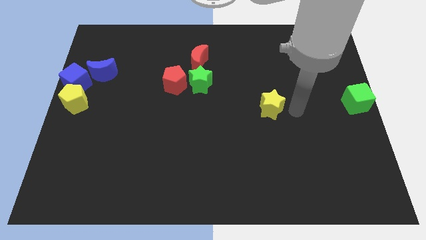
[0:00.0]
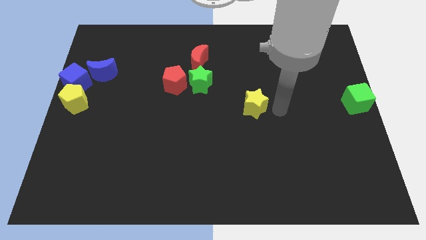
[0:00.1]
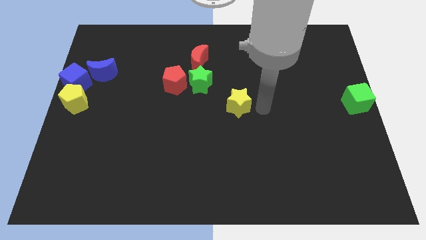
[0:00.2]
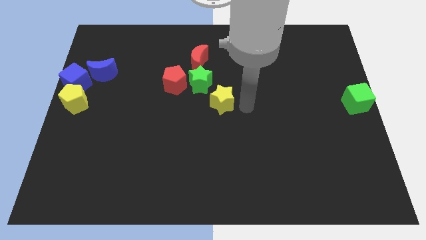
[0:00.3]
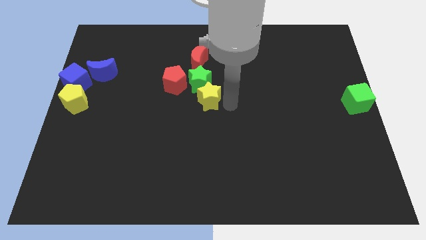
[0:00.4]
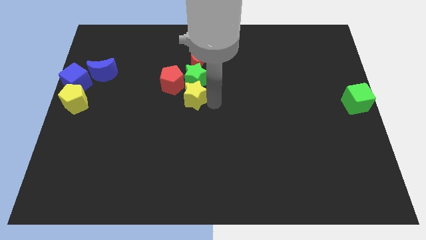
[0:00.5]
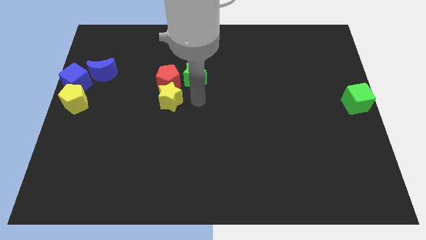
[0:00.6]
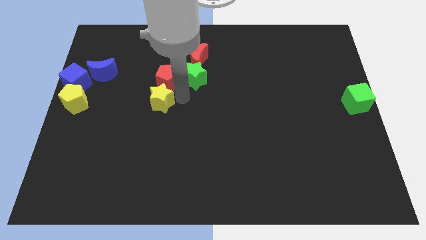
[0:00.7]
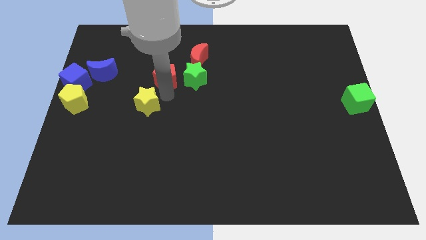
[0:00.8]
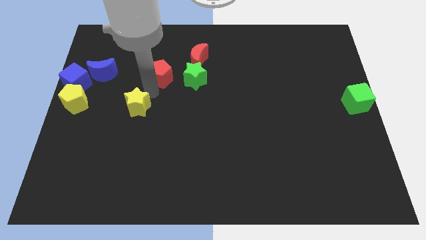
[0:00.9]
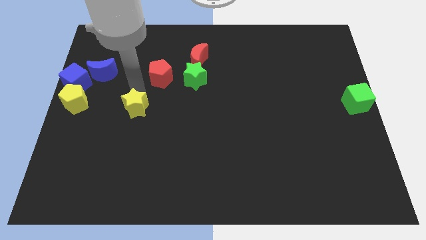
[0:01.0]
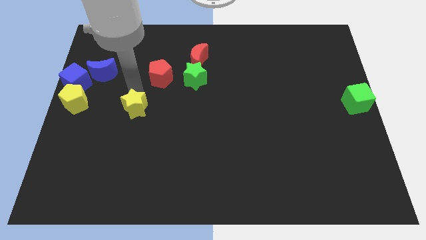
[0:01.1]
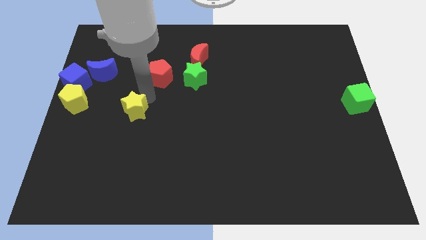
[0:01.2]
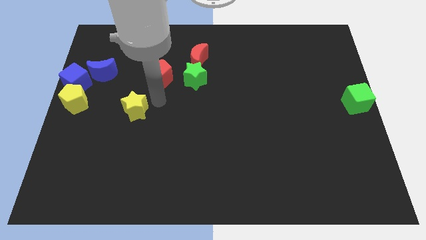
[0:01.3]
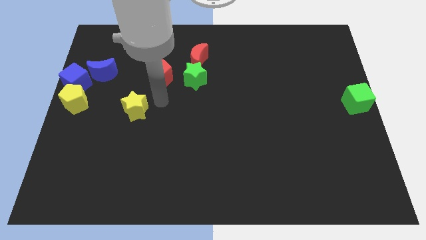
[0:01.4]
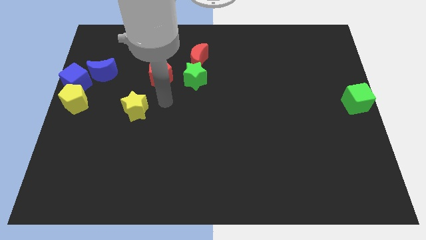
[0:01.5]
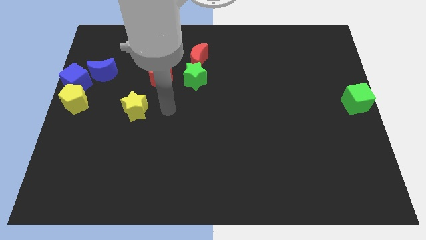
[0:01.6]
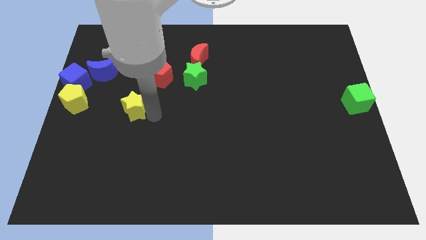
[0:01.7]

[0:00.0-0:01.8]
move the yellow star left side

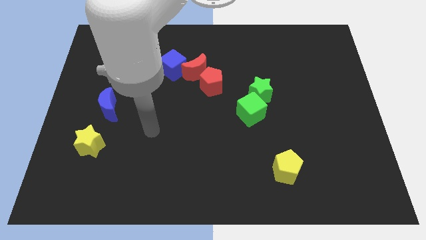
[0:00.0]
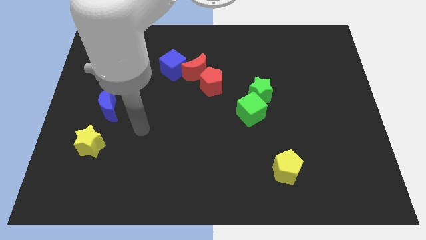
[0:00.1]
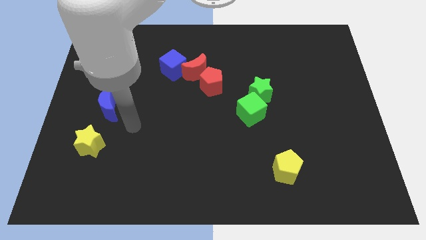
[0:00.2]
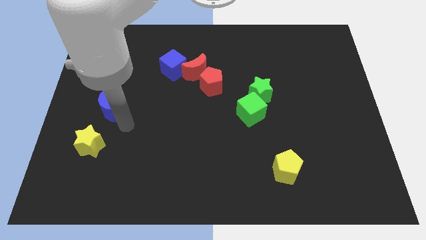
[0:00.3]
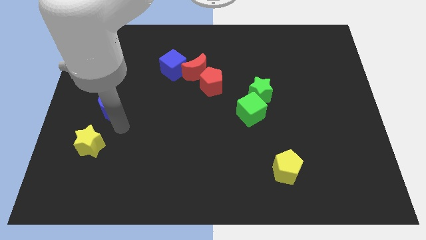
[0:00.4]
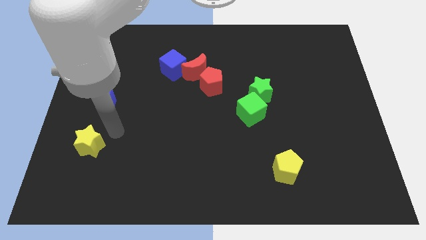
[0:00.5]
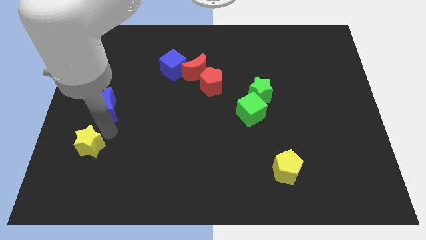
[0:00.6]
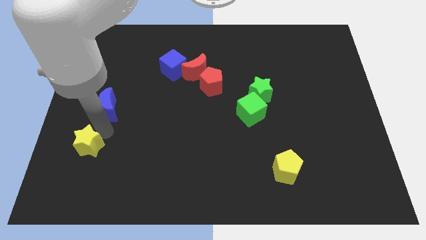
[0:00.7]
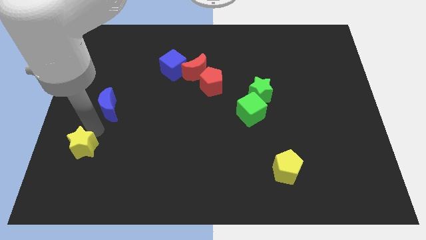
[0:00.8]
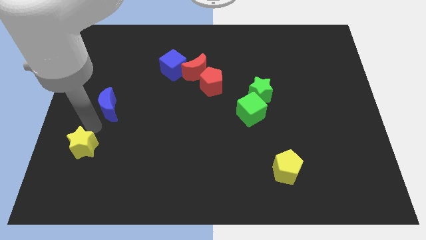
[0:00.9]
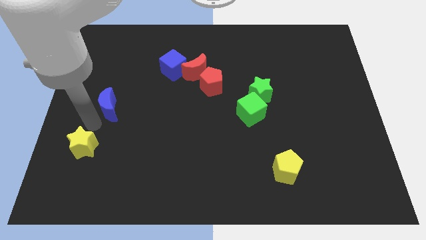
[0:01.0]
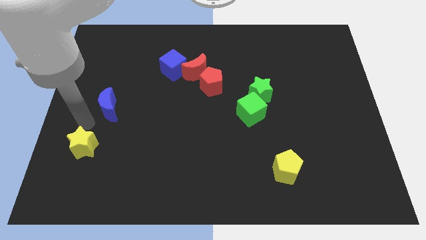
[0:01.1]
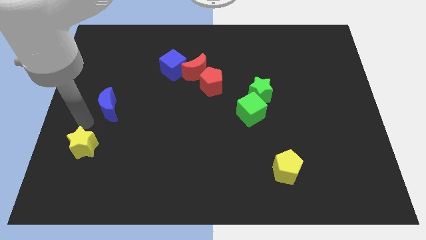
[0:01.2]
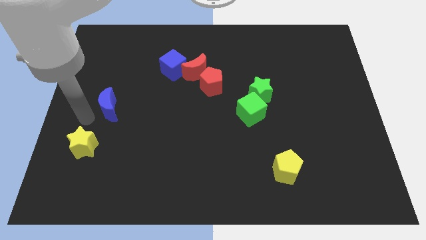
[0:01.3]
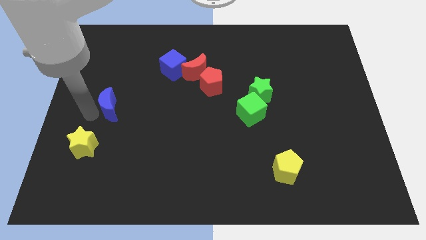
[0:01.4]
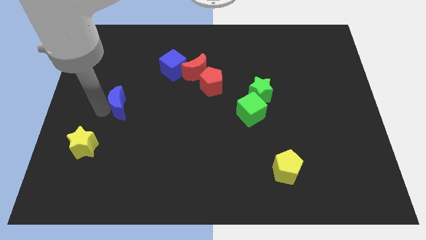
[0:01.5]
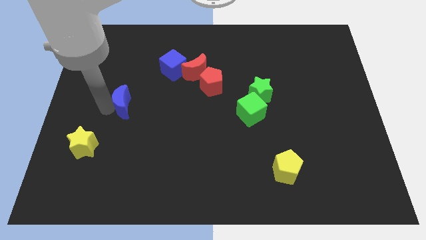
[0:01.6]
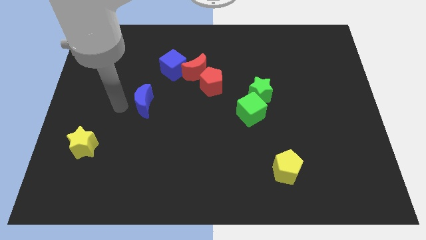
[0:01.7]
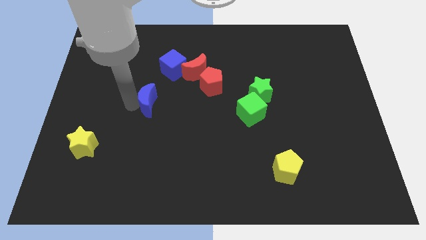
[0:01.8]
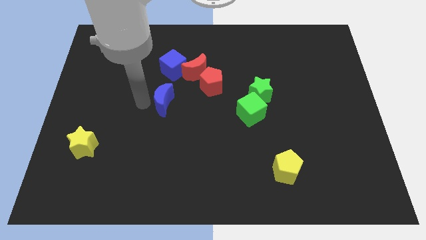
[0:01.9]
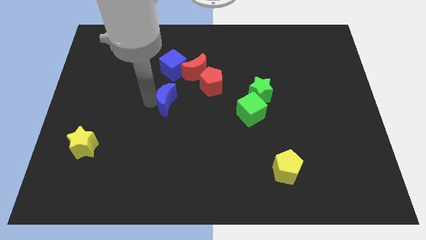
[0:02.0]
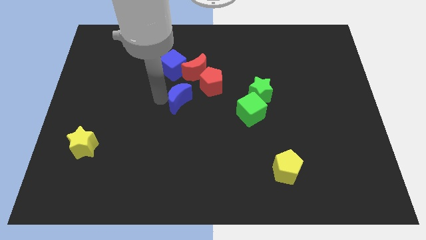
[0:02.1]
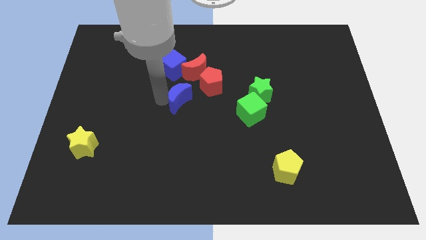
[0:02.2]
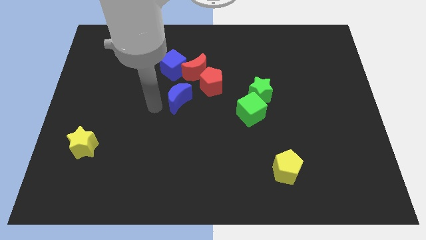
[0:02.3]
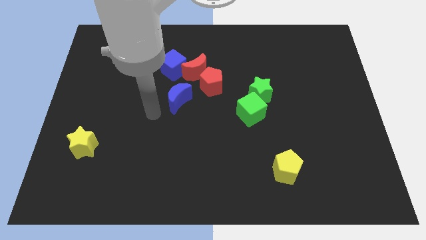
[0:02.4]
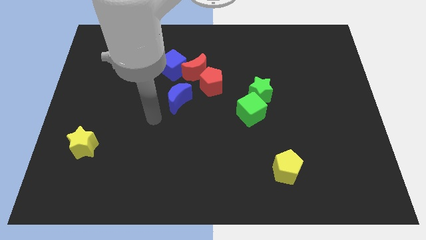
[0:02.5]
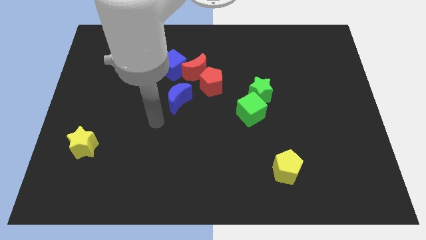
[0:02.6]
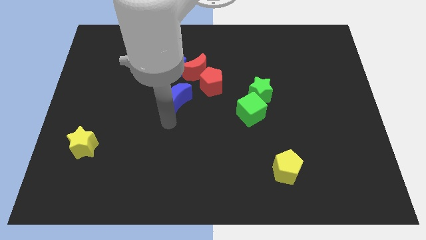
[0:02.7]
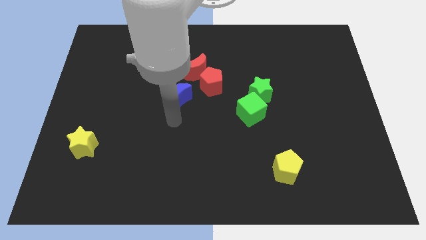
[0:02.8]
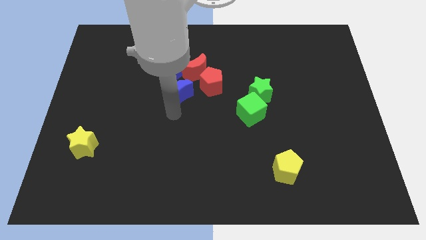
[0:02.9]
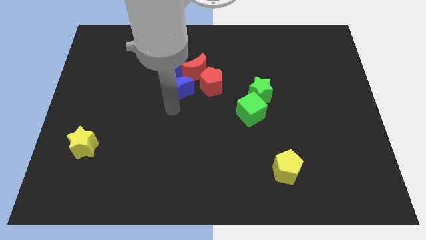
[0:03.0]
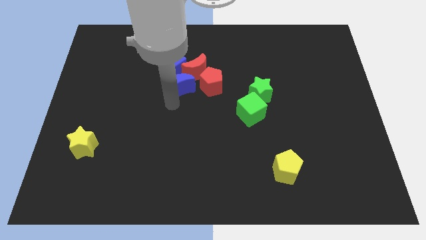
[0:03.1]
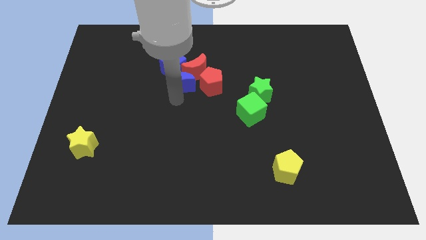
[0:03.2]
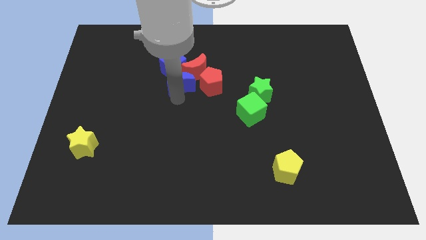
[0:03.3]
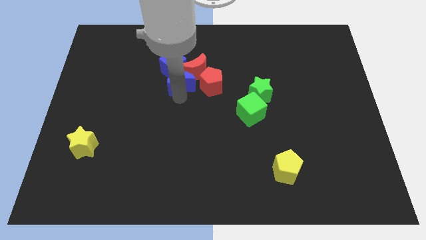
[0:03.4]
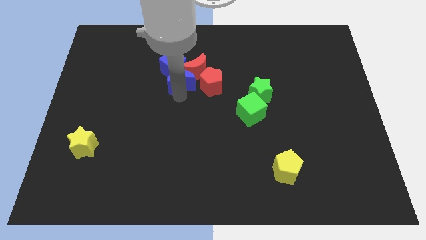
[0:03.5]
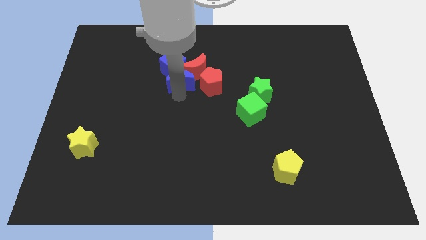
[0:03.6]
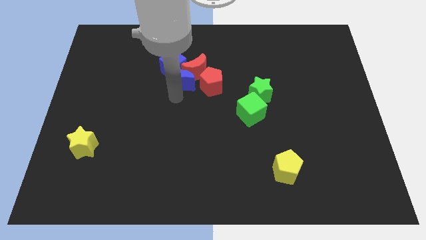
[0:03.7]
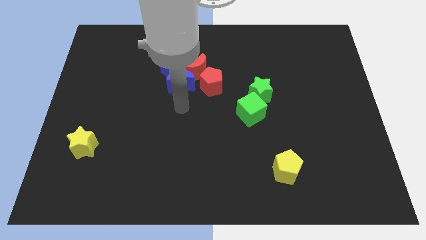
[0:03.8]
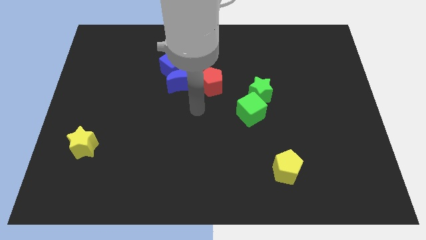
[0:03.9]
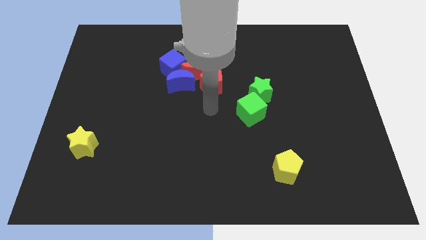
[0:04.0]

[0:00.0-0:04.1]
move the blue crescent into the group of blocks

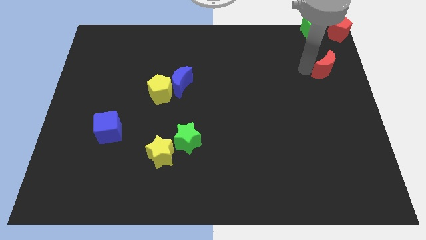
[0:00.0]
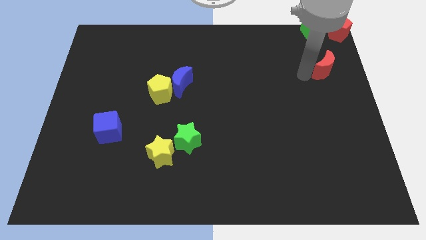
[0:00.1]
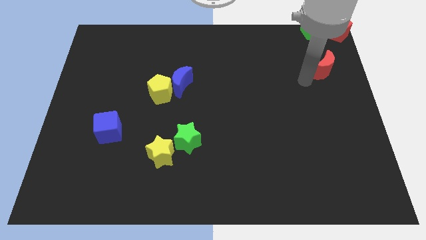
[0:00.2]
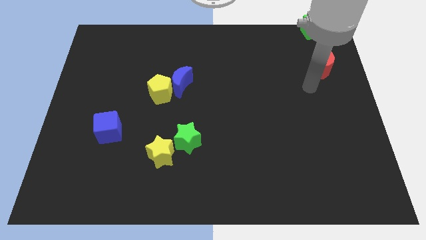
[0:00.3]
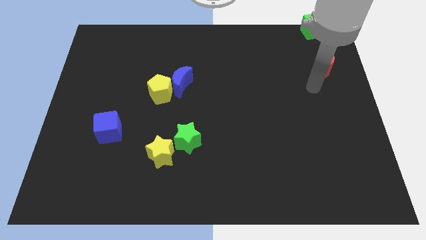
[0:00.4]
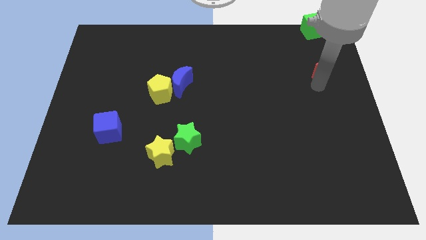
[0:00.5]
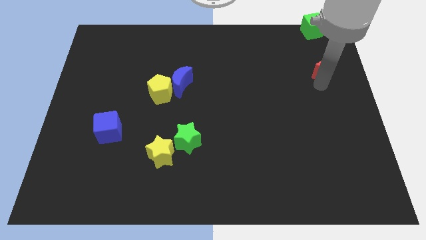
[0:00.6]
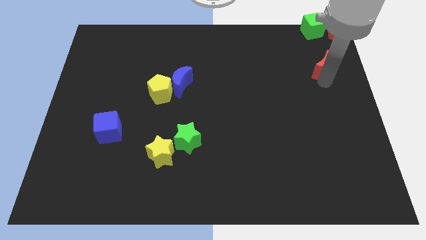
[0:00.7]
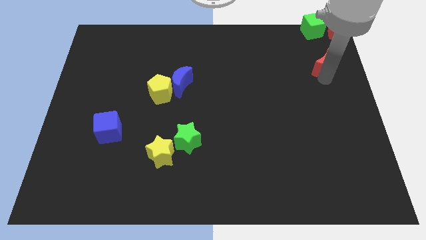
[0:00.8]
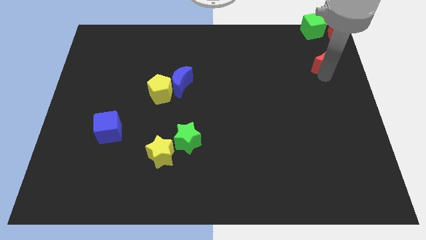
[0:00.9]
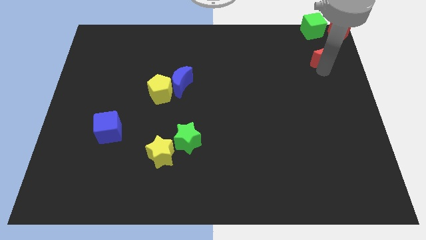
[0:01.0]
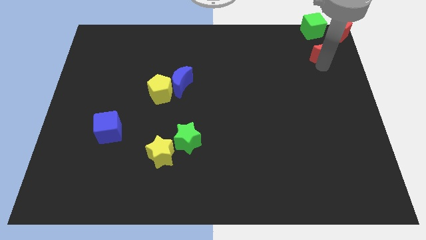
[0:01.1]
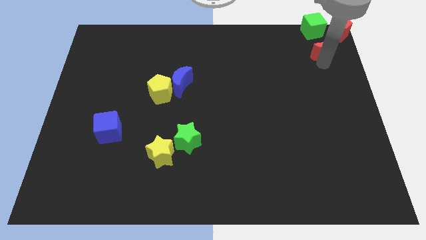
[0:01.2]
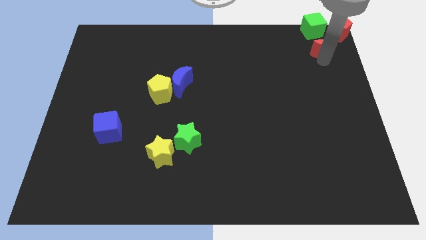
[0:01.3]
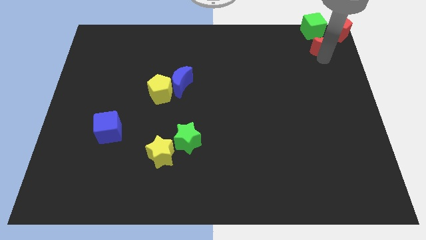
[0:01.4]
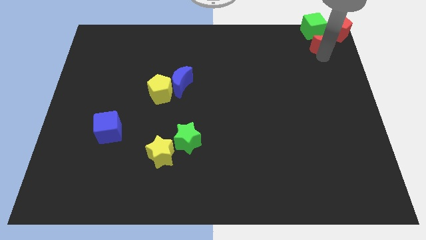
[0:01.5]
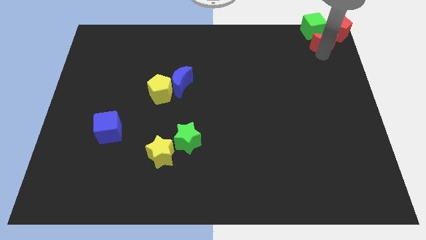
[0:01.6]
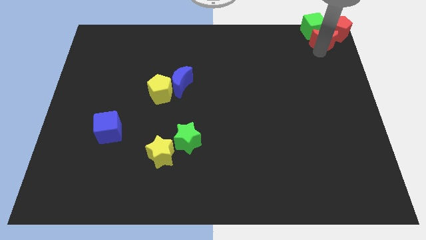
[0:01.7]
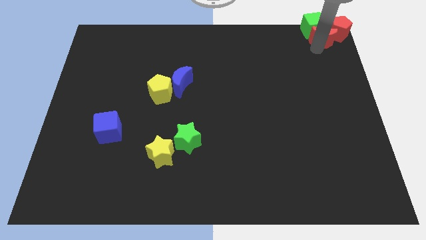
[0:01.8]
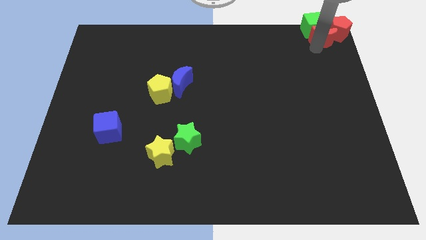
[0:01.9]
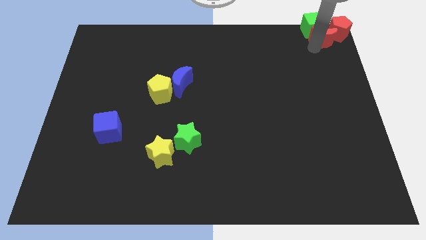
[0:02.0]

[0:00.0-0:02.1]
move the crescent into the green cube and the red pentagon

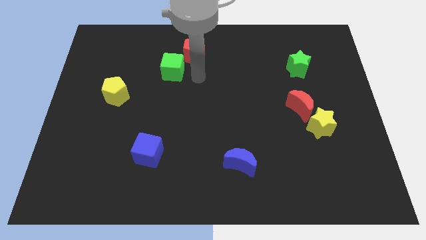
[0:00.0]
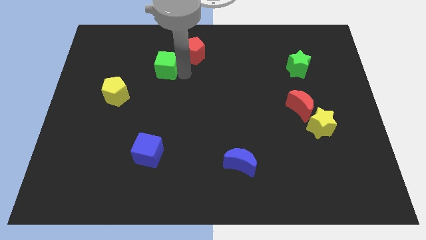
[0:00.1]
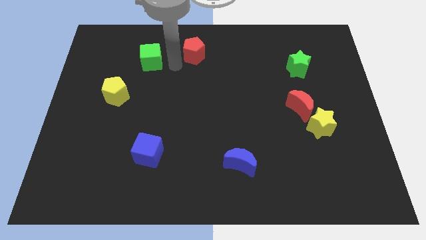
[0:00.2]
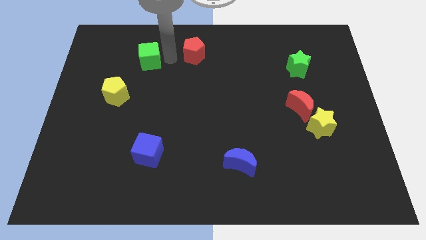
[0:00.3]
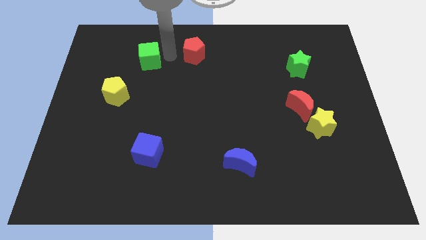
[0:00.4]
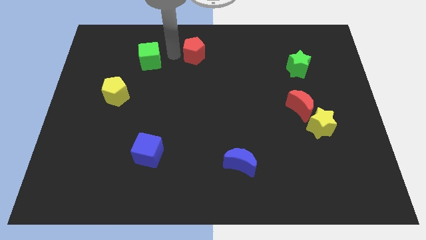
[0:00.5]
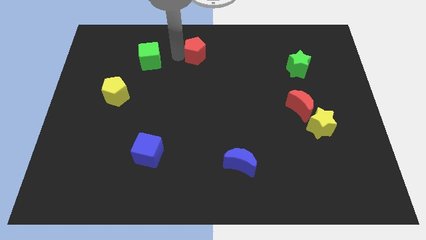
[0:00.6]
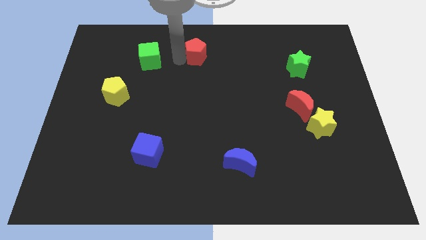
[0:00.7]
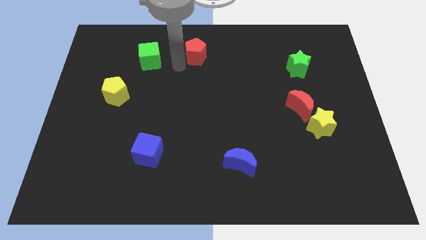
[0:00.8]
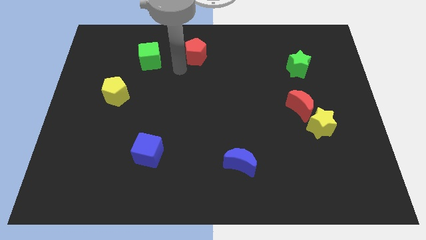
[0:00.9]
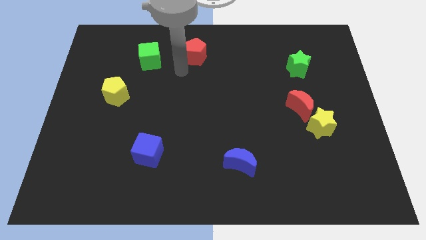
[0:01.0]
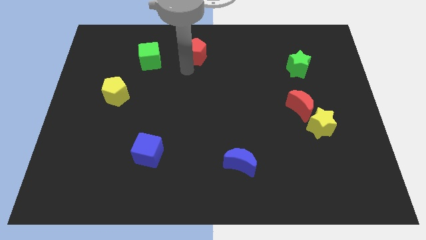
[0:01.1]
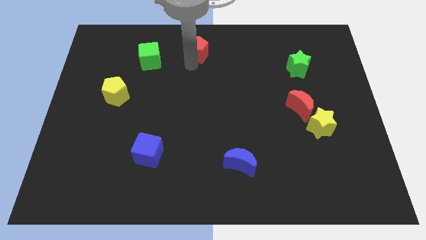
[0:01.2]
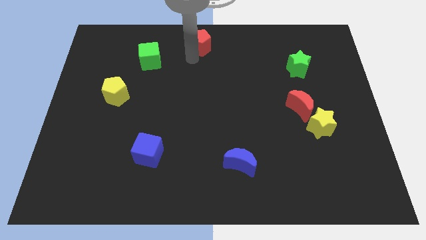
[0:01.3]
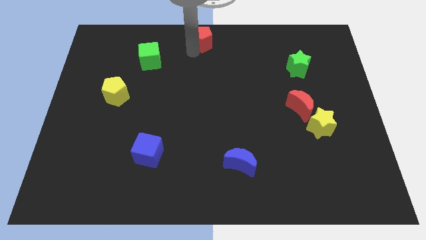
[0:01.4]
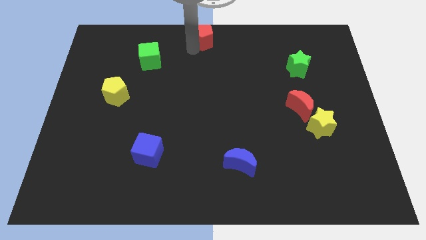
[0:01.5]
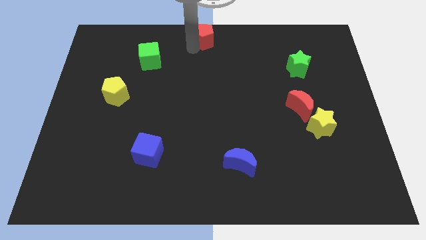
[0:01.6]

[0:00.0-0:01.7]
separate the green cube and the red pentagon from each other
